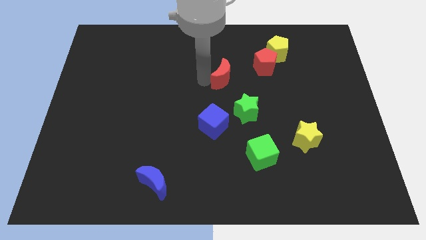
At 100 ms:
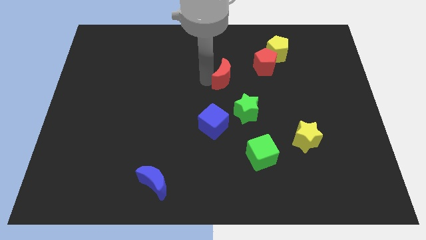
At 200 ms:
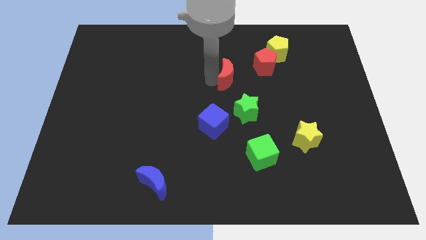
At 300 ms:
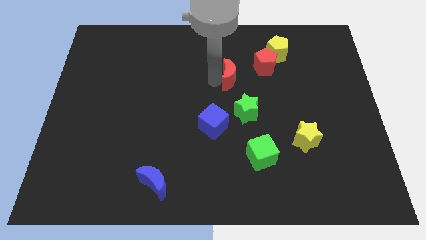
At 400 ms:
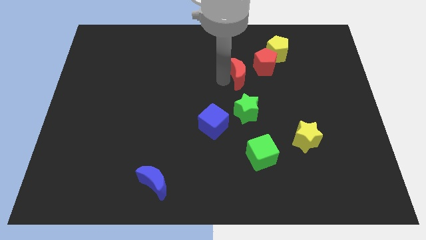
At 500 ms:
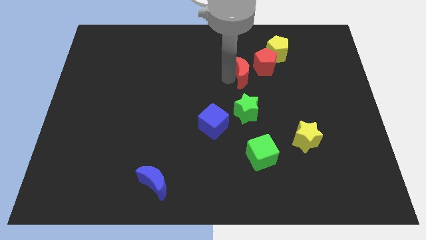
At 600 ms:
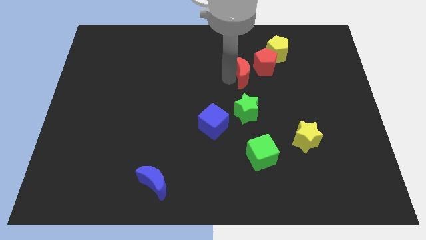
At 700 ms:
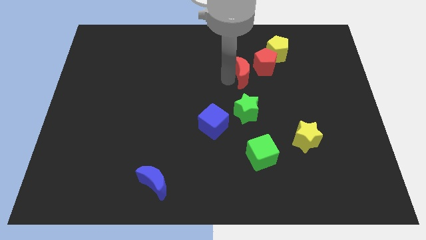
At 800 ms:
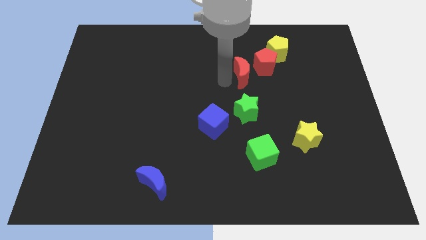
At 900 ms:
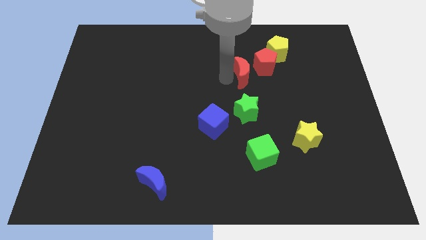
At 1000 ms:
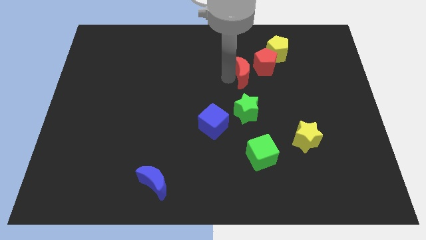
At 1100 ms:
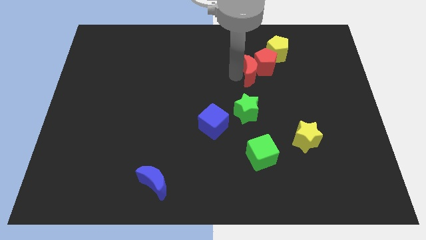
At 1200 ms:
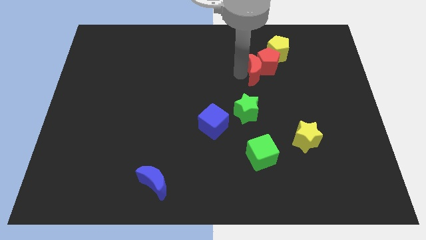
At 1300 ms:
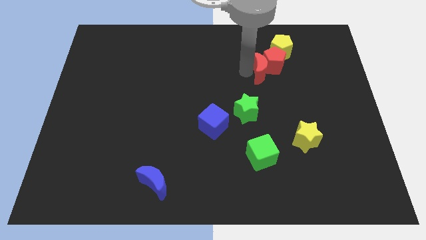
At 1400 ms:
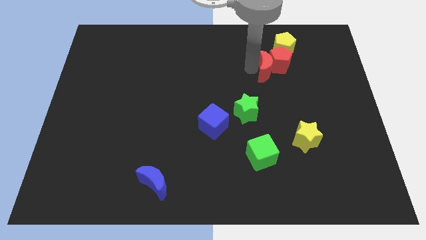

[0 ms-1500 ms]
move the red crescent into the red pentagon

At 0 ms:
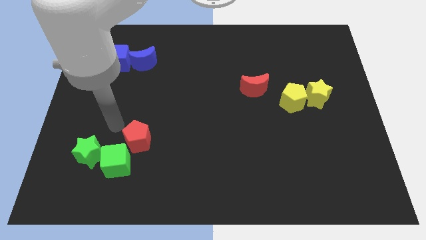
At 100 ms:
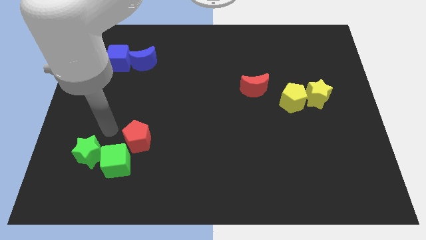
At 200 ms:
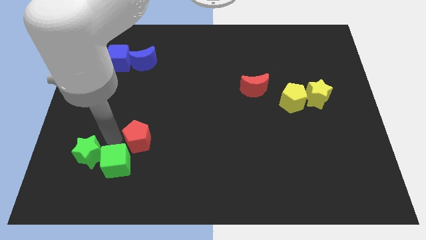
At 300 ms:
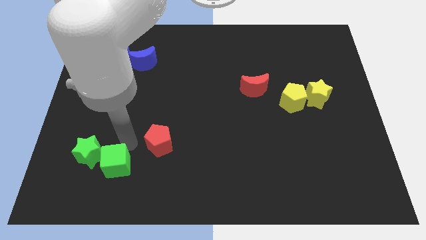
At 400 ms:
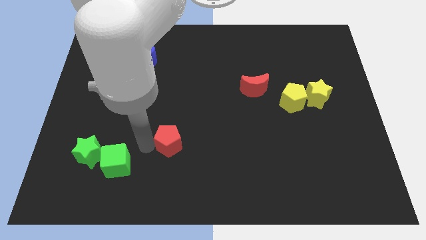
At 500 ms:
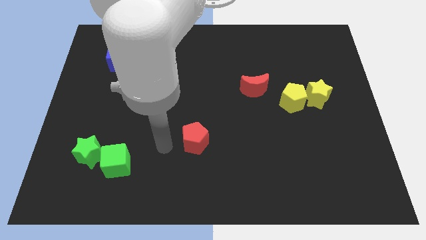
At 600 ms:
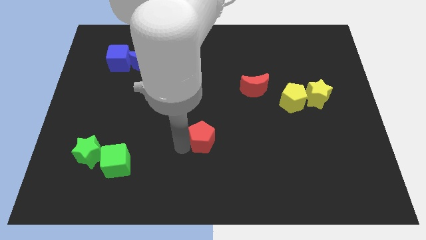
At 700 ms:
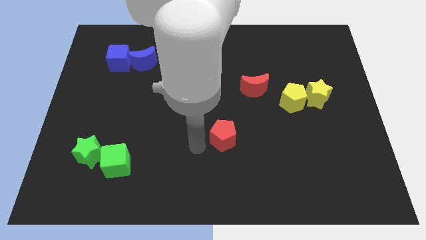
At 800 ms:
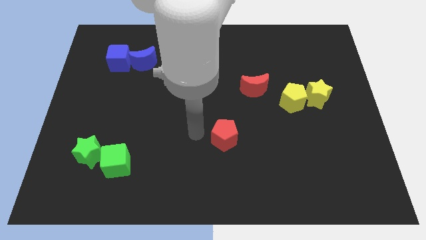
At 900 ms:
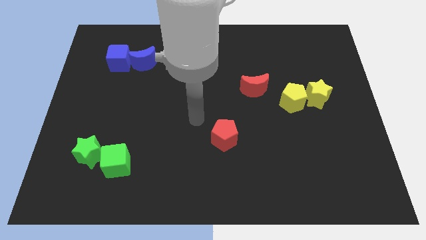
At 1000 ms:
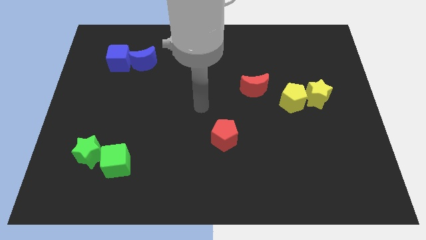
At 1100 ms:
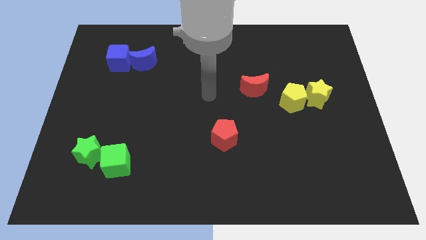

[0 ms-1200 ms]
move the red pentagon to the bottom left of the red crescent

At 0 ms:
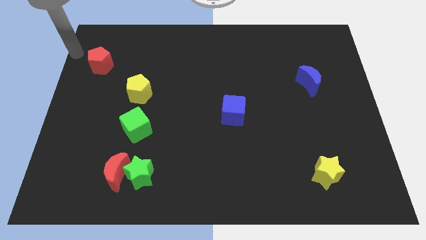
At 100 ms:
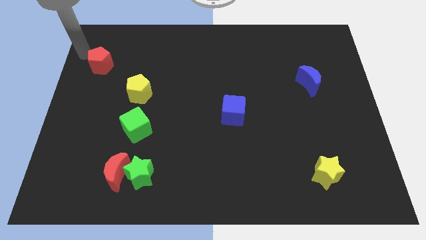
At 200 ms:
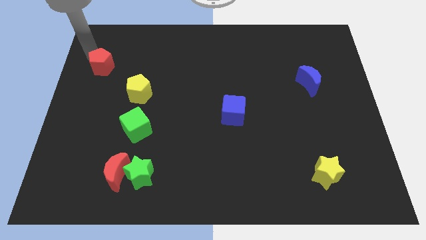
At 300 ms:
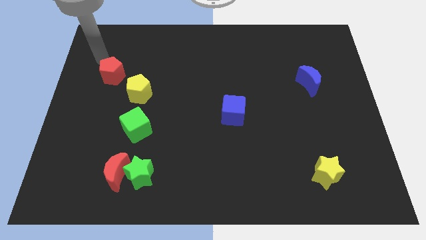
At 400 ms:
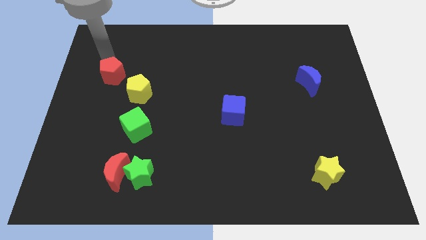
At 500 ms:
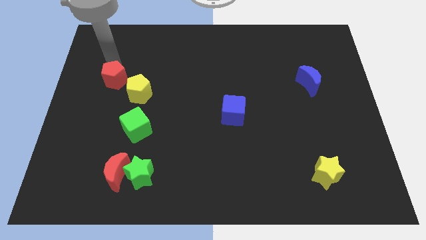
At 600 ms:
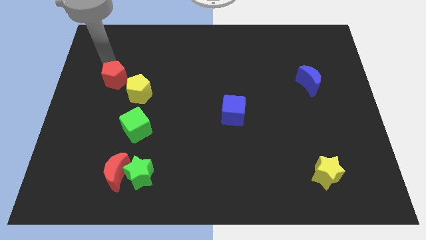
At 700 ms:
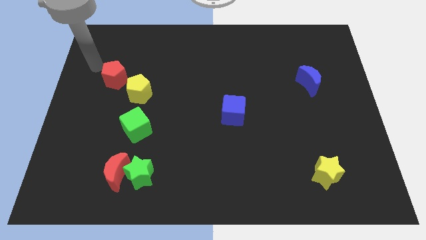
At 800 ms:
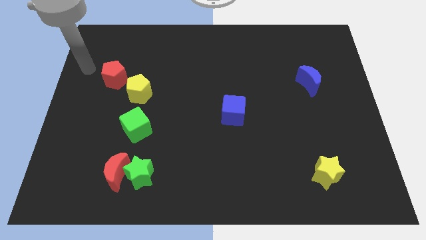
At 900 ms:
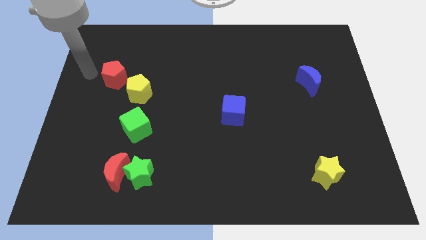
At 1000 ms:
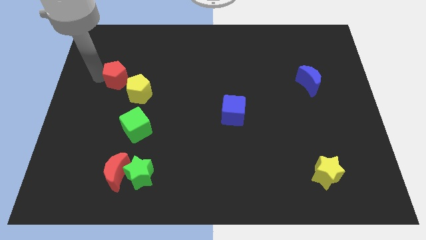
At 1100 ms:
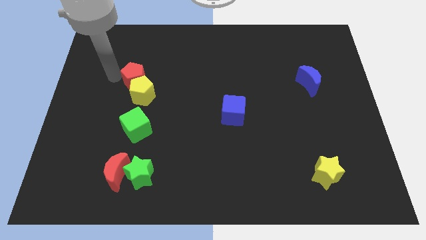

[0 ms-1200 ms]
push the red pentagon into yellow pentagon

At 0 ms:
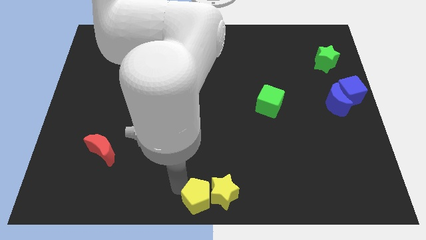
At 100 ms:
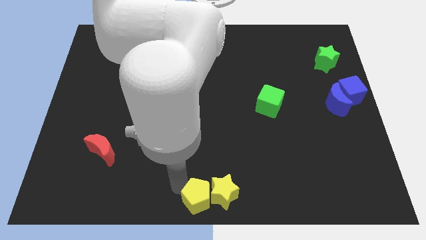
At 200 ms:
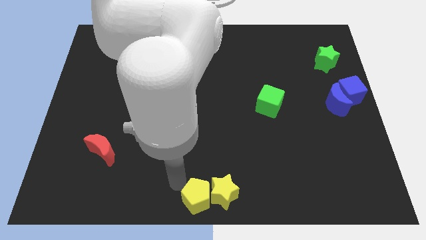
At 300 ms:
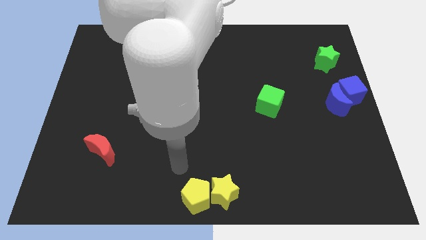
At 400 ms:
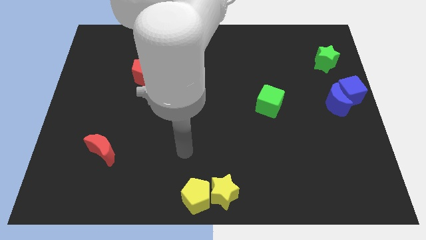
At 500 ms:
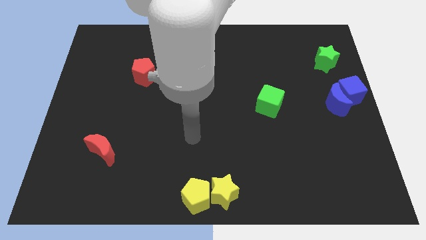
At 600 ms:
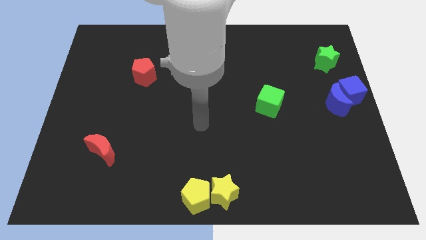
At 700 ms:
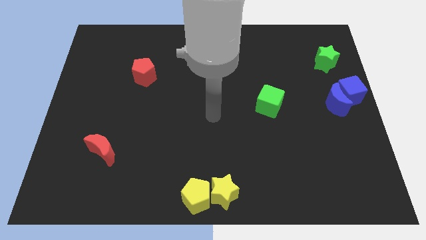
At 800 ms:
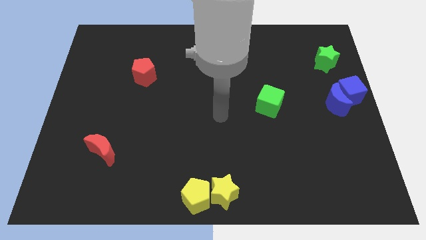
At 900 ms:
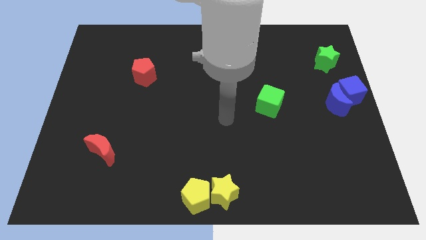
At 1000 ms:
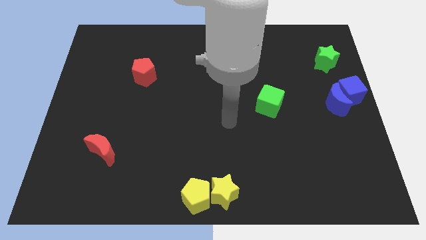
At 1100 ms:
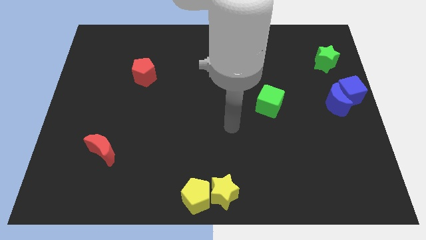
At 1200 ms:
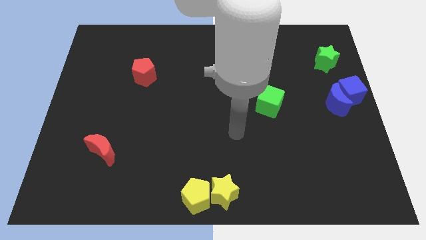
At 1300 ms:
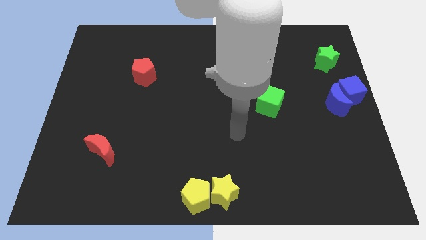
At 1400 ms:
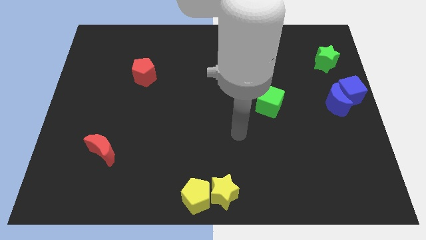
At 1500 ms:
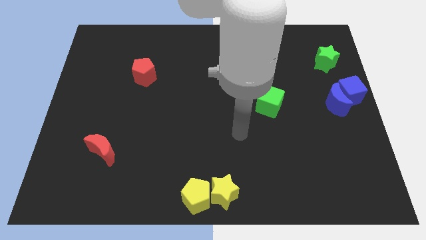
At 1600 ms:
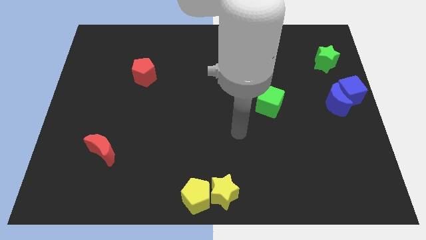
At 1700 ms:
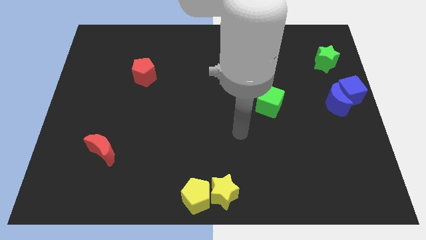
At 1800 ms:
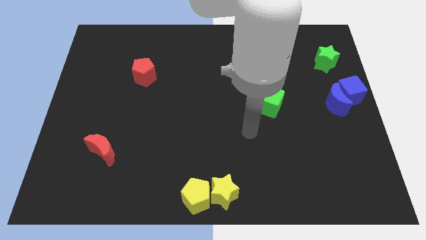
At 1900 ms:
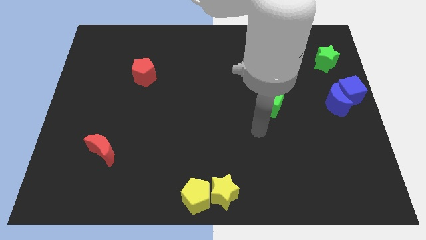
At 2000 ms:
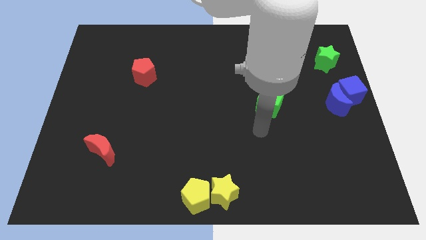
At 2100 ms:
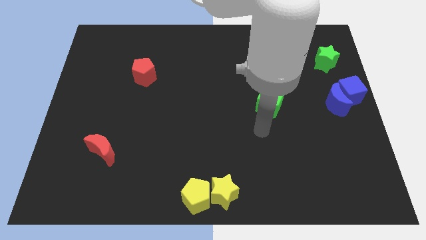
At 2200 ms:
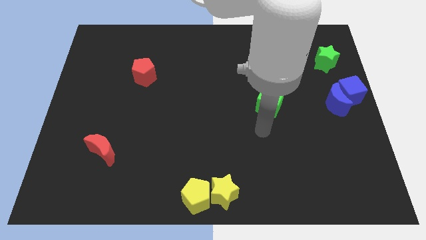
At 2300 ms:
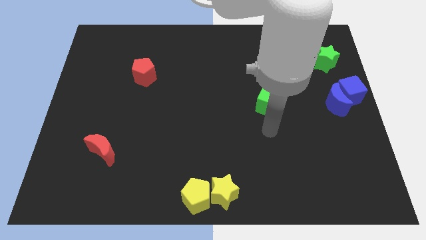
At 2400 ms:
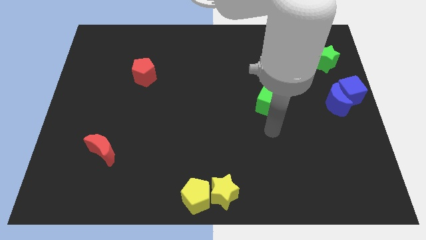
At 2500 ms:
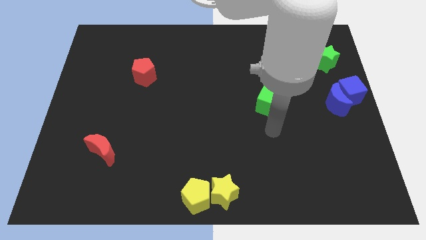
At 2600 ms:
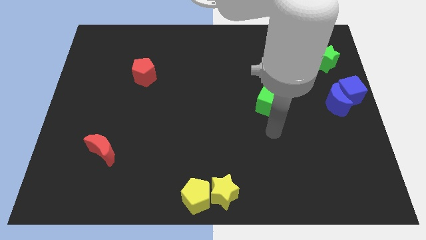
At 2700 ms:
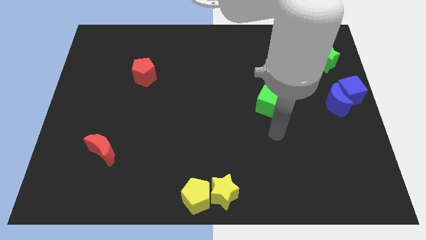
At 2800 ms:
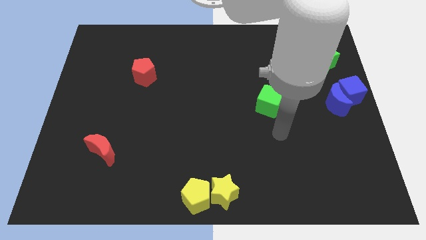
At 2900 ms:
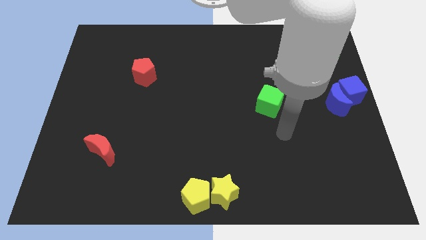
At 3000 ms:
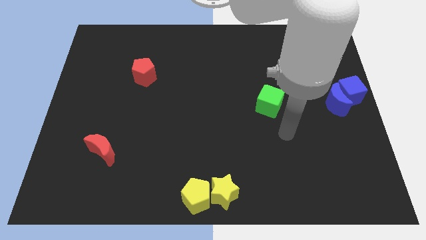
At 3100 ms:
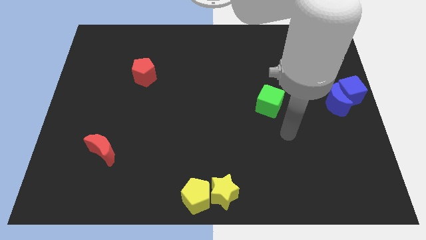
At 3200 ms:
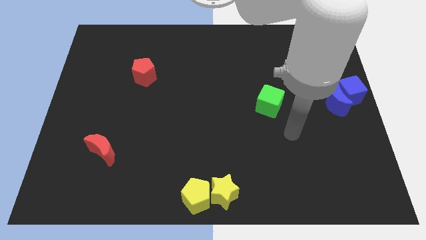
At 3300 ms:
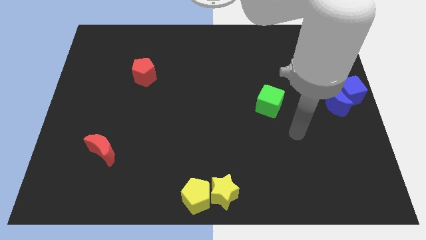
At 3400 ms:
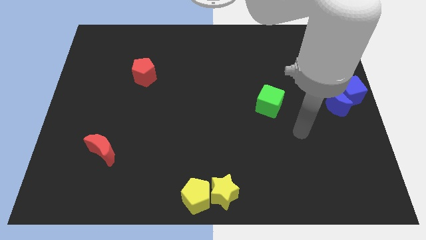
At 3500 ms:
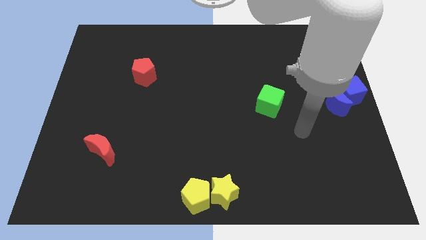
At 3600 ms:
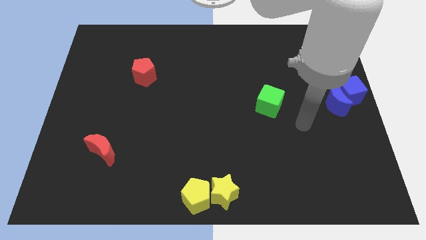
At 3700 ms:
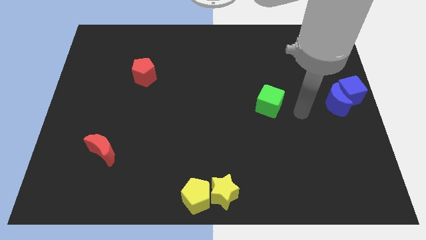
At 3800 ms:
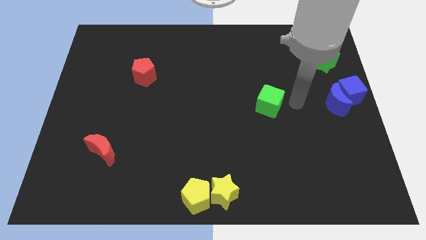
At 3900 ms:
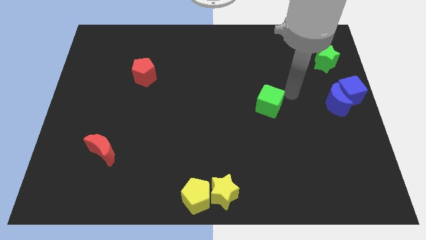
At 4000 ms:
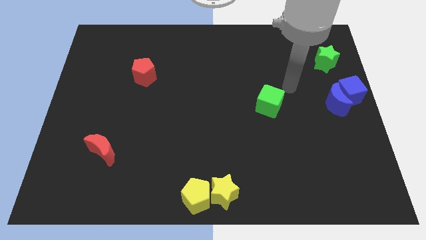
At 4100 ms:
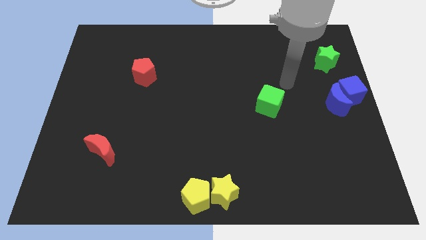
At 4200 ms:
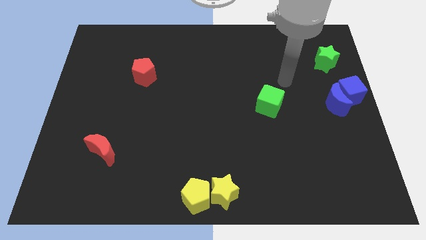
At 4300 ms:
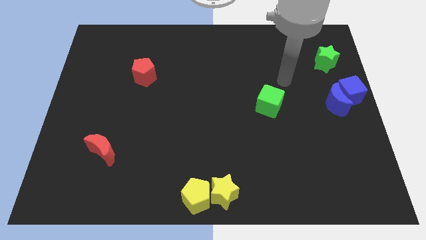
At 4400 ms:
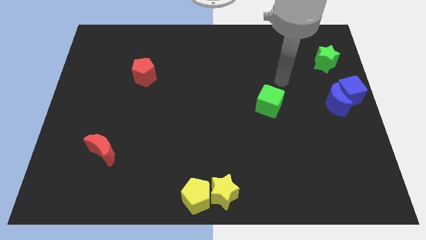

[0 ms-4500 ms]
go to the top side of the green cube

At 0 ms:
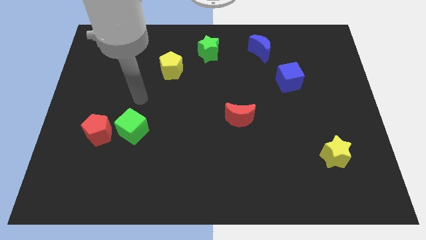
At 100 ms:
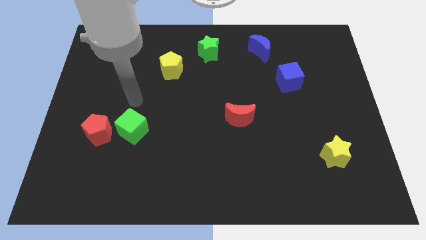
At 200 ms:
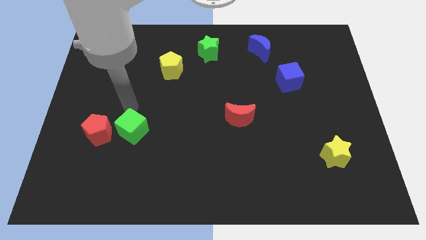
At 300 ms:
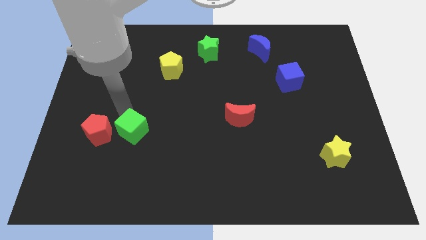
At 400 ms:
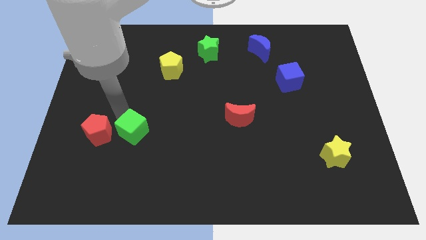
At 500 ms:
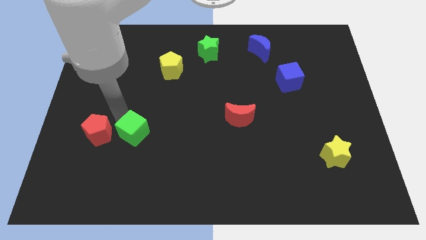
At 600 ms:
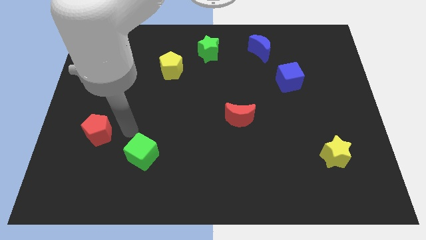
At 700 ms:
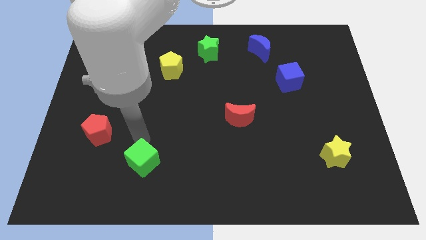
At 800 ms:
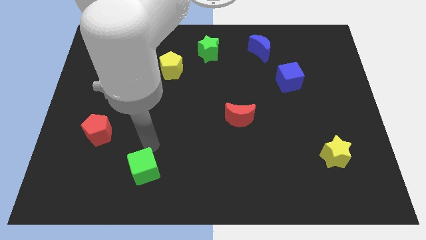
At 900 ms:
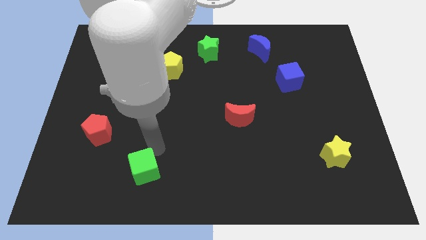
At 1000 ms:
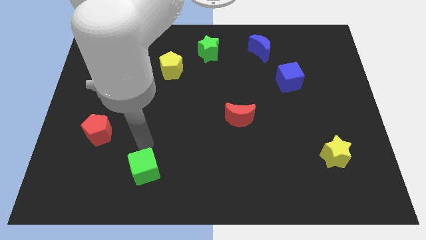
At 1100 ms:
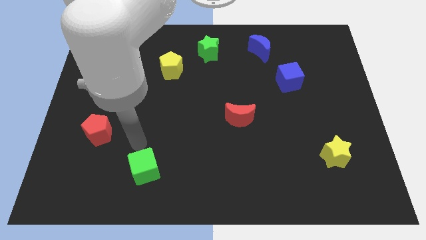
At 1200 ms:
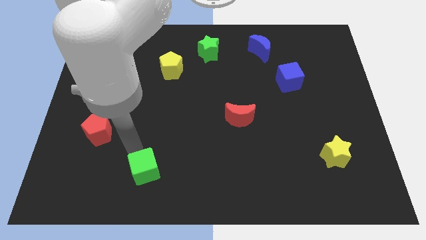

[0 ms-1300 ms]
push the green cube towards the bottom center of the board
